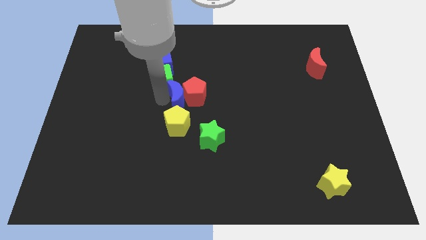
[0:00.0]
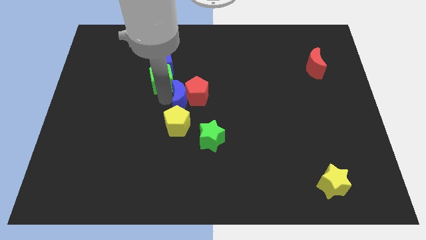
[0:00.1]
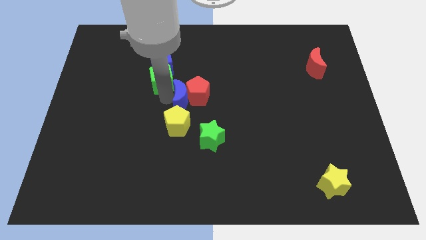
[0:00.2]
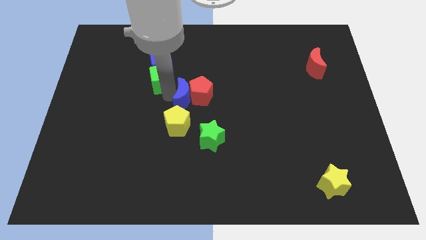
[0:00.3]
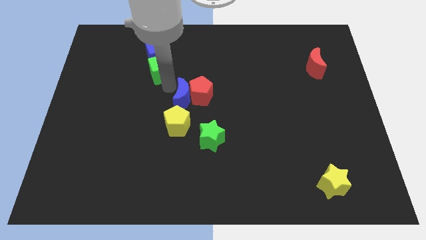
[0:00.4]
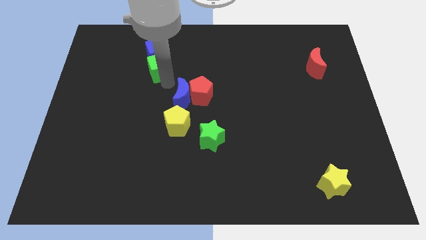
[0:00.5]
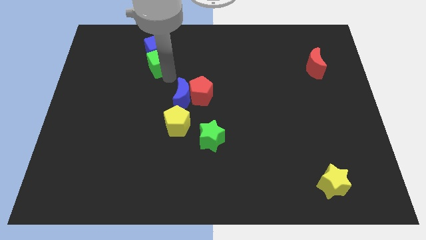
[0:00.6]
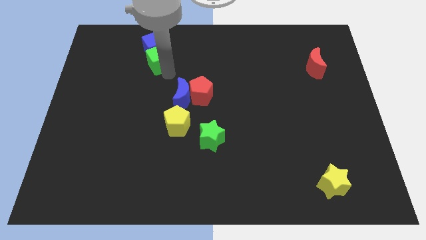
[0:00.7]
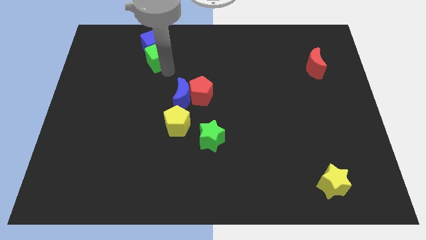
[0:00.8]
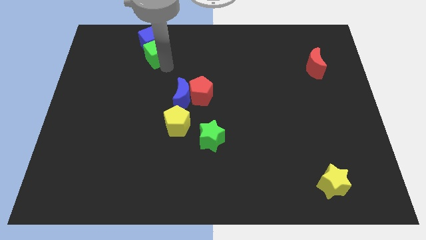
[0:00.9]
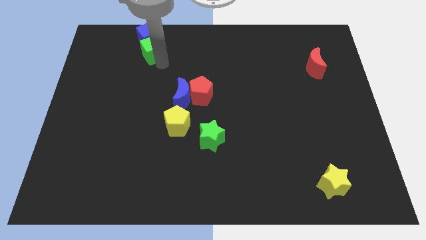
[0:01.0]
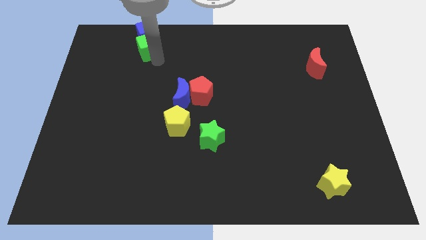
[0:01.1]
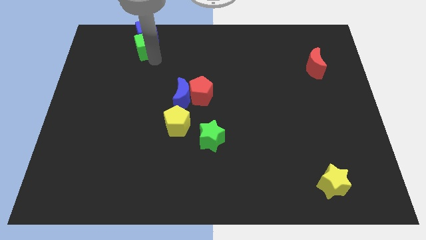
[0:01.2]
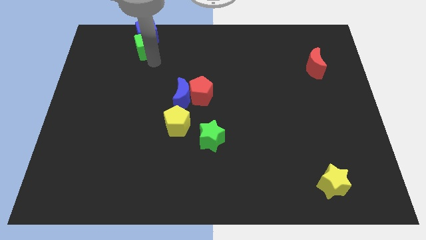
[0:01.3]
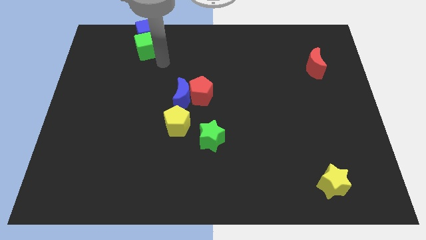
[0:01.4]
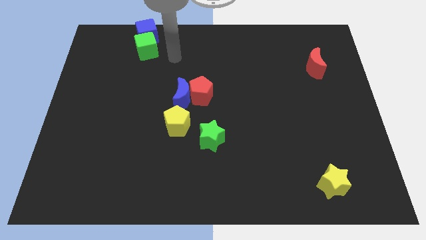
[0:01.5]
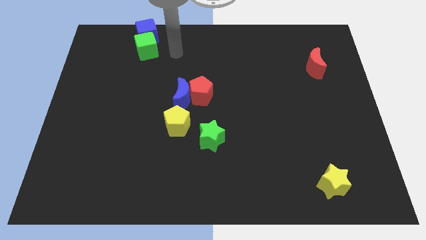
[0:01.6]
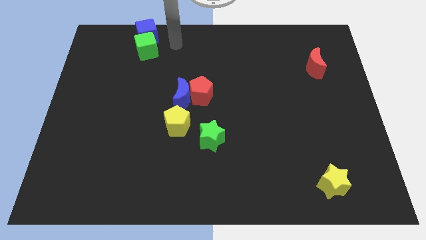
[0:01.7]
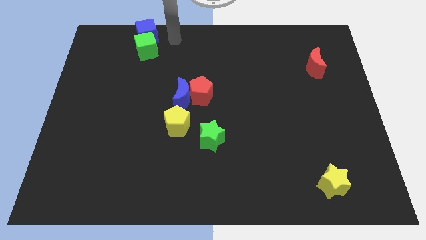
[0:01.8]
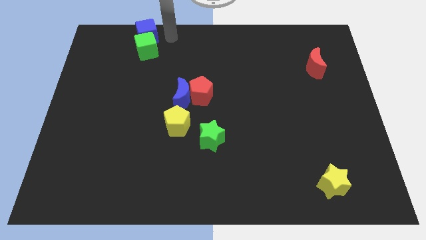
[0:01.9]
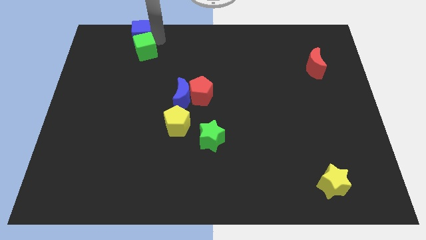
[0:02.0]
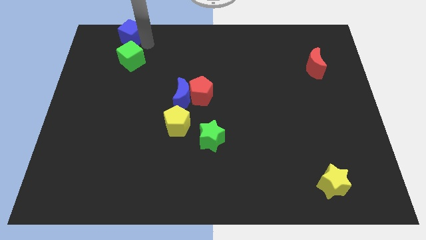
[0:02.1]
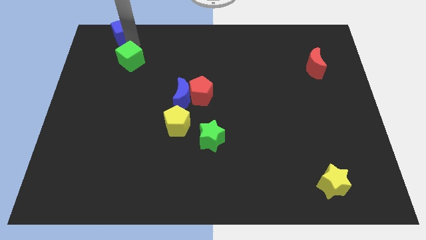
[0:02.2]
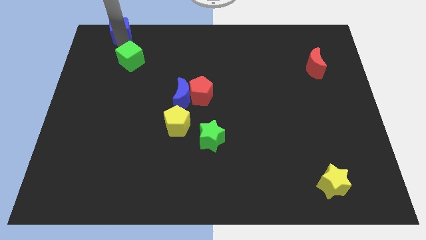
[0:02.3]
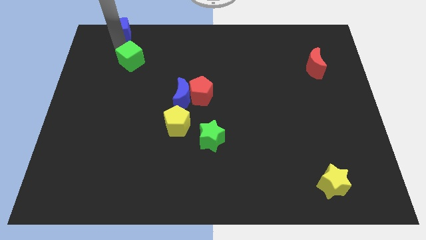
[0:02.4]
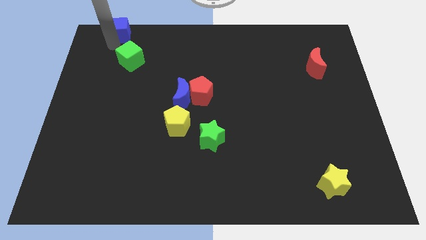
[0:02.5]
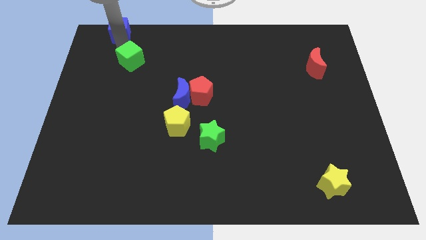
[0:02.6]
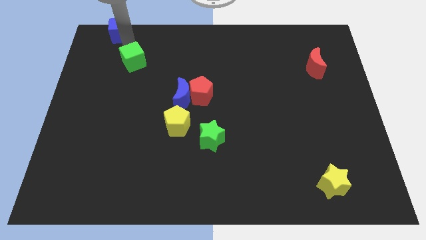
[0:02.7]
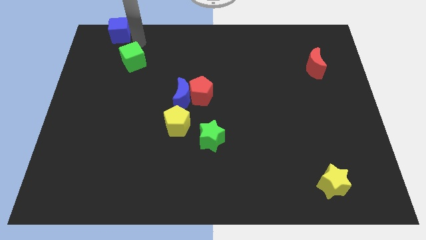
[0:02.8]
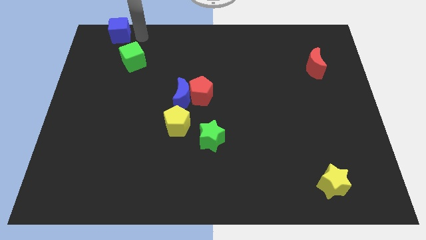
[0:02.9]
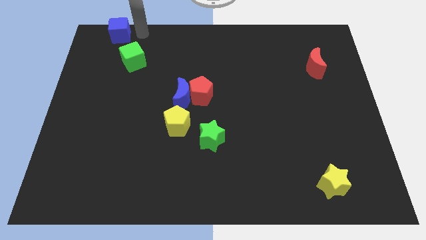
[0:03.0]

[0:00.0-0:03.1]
push green and blue cubes towards top left

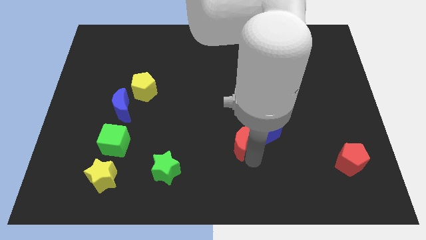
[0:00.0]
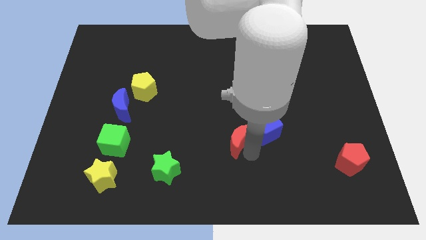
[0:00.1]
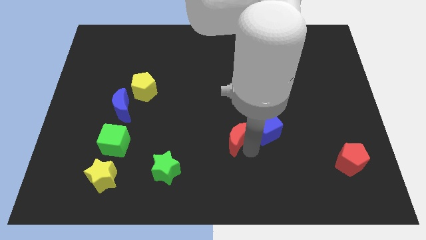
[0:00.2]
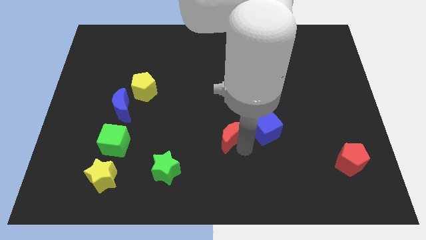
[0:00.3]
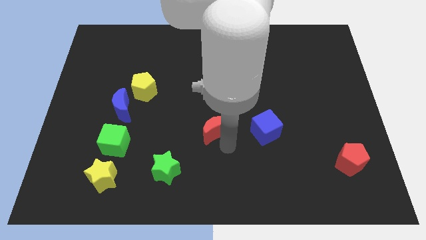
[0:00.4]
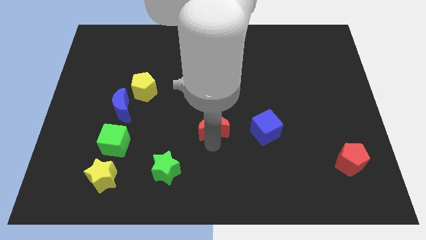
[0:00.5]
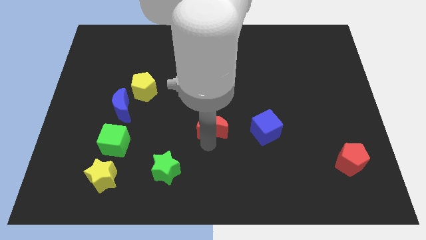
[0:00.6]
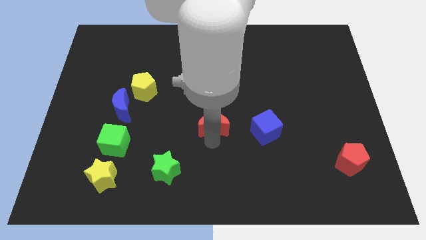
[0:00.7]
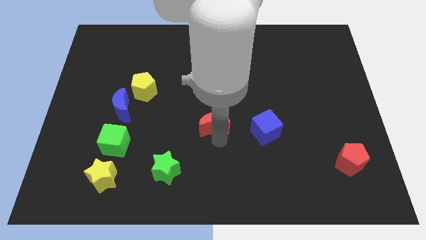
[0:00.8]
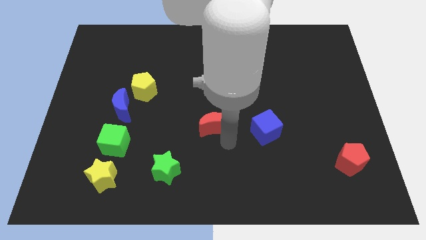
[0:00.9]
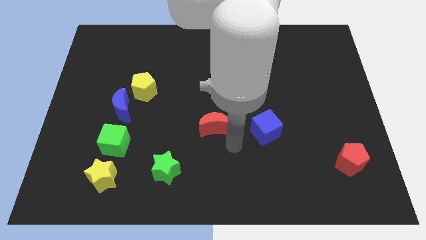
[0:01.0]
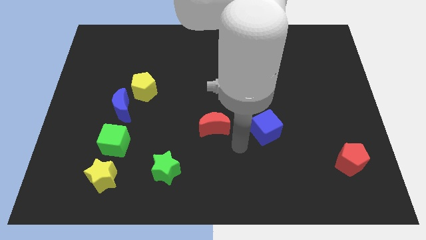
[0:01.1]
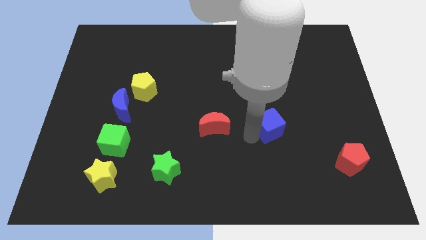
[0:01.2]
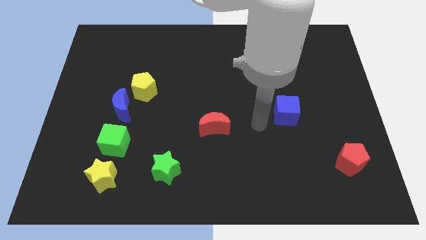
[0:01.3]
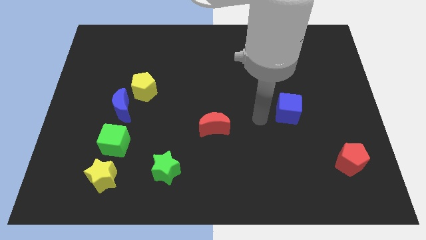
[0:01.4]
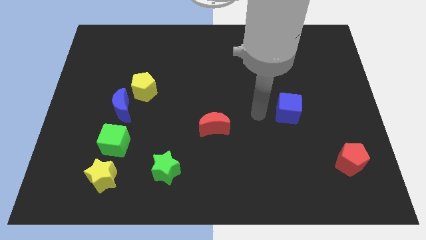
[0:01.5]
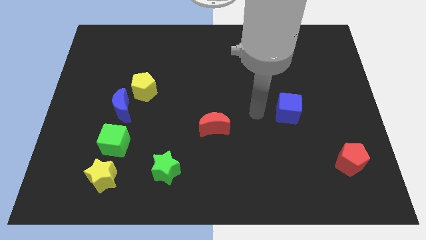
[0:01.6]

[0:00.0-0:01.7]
separate the red crescent and the blue cube

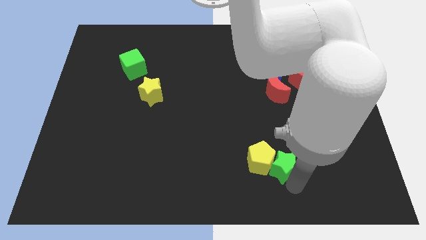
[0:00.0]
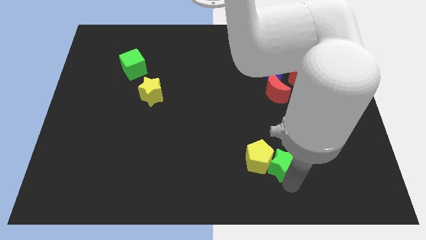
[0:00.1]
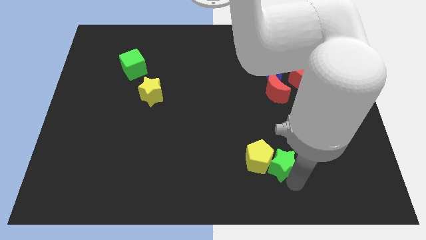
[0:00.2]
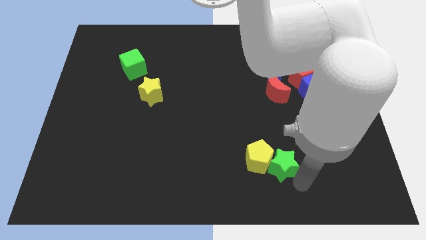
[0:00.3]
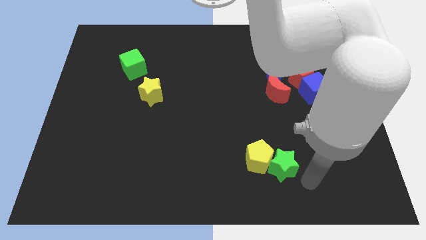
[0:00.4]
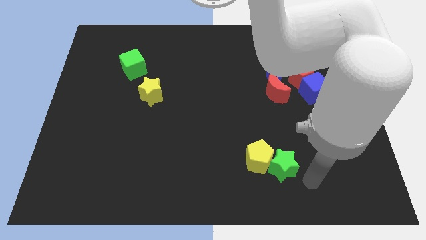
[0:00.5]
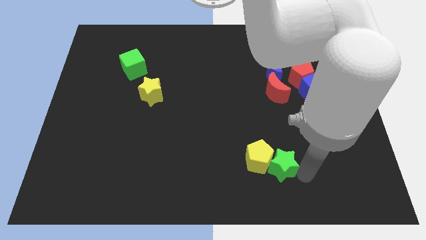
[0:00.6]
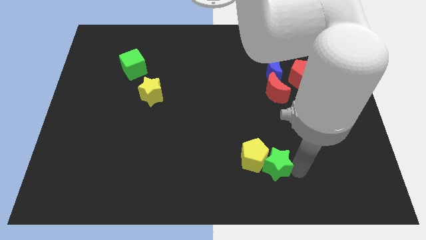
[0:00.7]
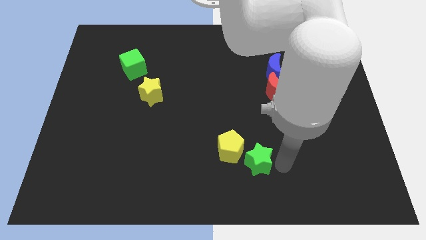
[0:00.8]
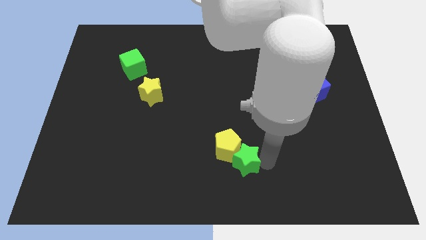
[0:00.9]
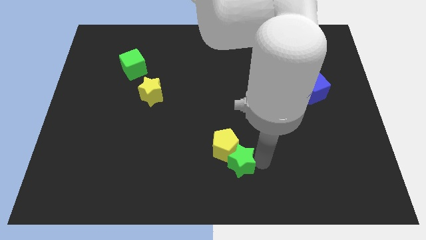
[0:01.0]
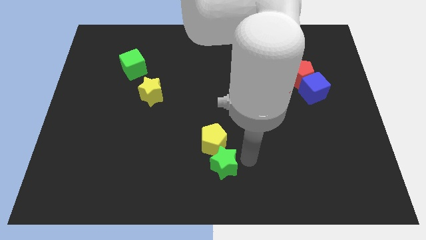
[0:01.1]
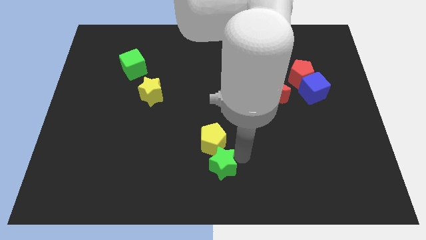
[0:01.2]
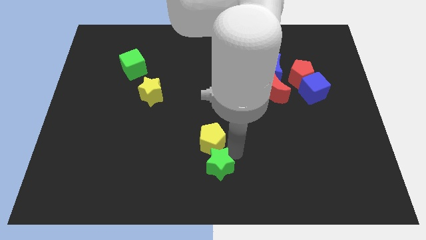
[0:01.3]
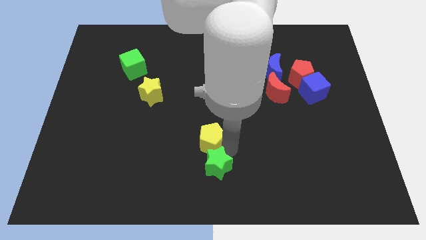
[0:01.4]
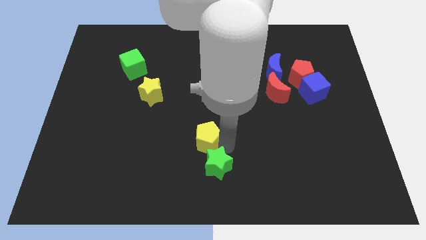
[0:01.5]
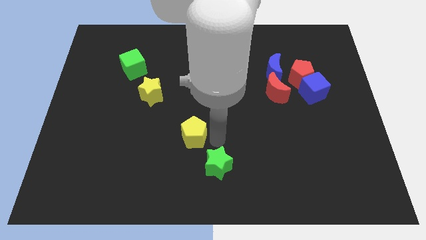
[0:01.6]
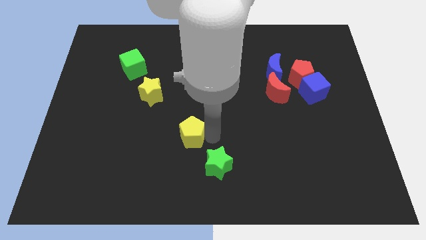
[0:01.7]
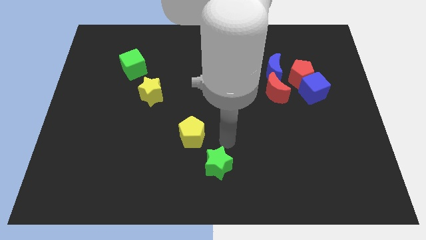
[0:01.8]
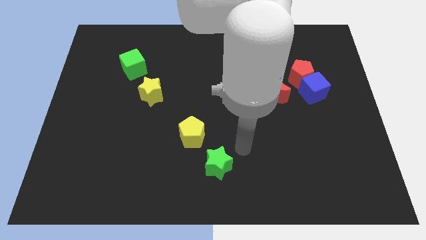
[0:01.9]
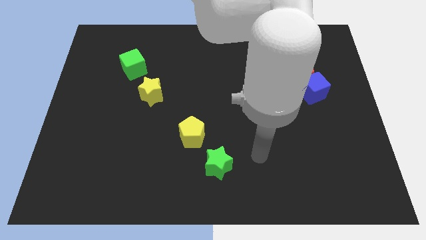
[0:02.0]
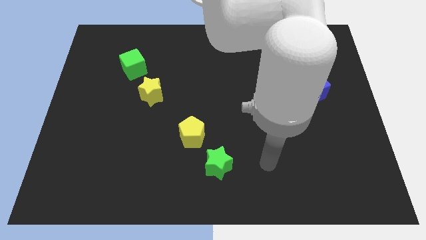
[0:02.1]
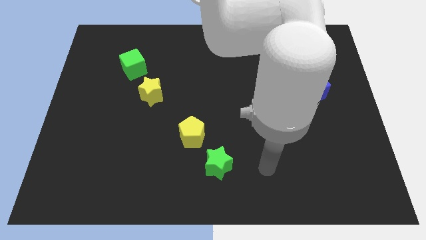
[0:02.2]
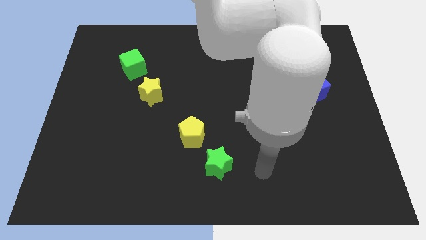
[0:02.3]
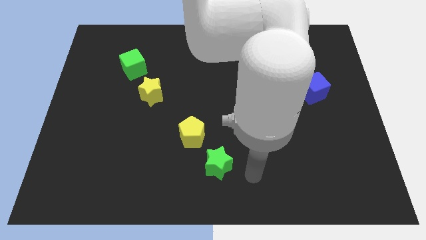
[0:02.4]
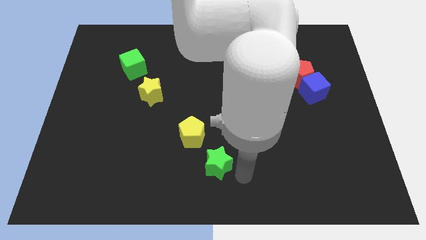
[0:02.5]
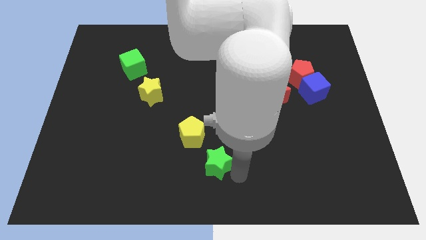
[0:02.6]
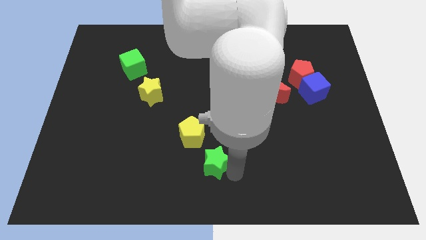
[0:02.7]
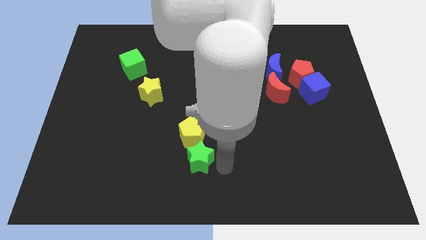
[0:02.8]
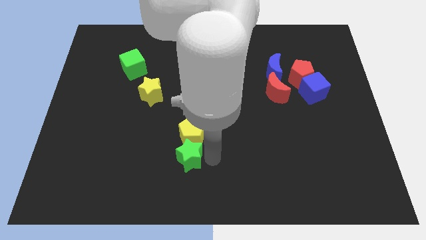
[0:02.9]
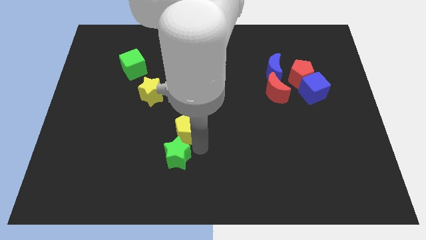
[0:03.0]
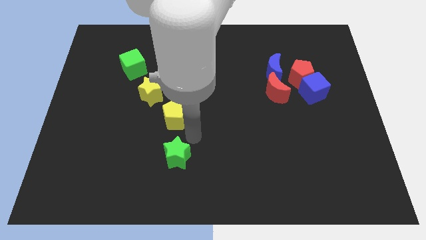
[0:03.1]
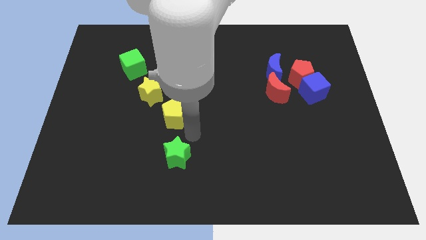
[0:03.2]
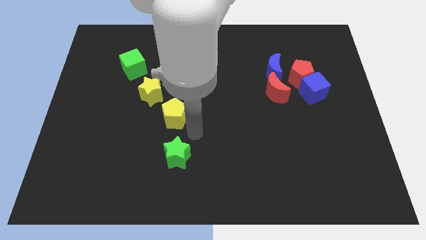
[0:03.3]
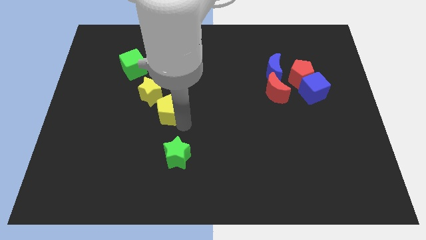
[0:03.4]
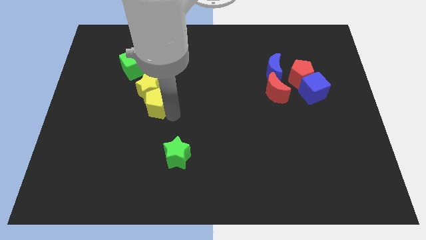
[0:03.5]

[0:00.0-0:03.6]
place the yellow pentagon below the yellow star

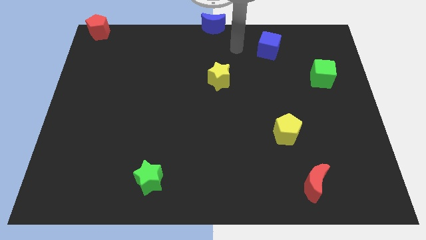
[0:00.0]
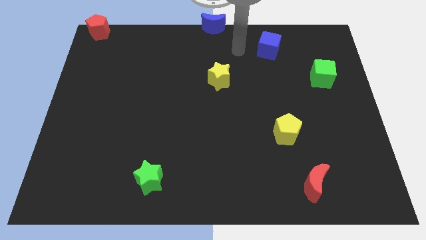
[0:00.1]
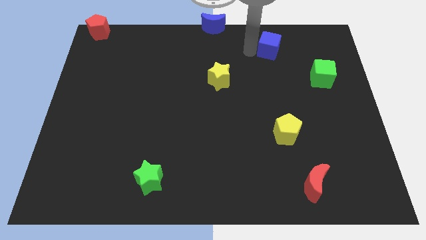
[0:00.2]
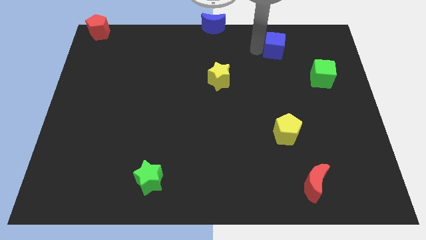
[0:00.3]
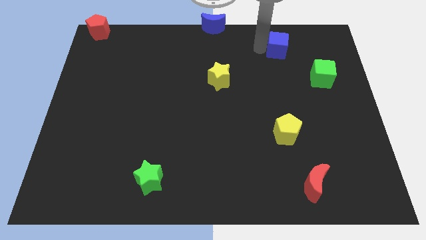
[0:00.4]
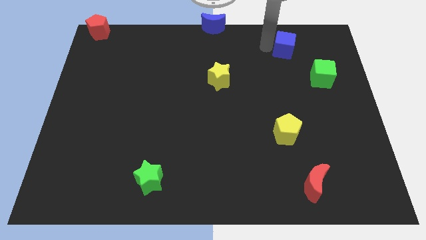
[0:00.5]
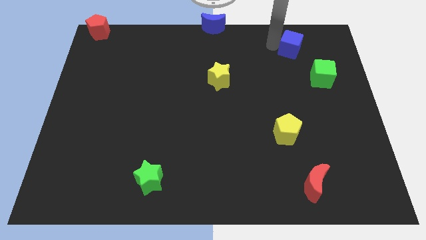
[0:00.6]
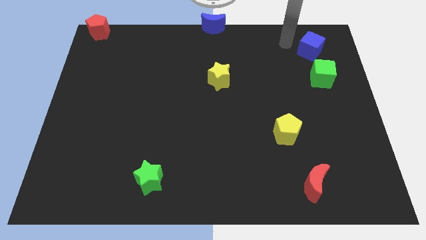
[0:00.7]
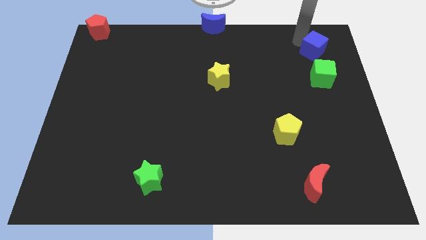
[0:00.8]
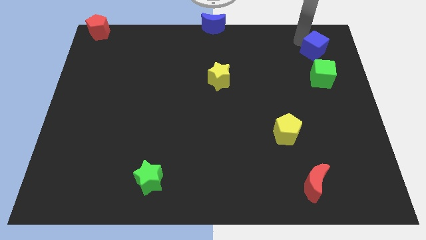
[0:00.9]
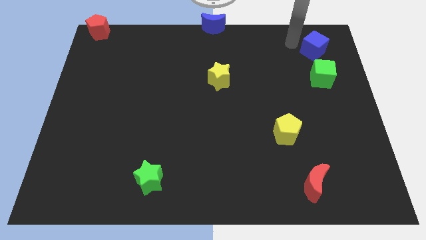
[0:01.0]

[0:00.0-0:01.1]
put the blue cube above the green cube
